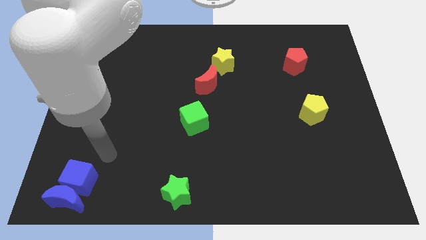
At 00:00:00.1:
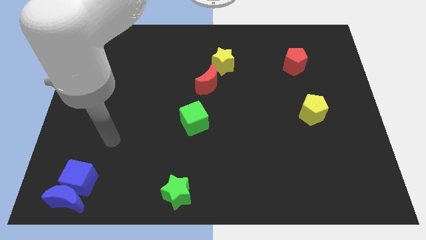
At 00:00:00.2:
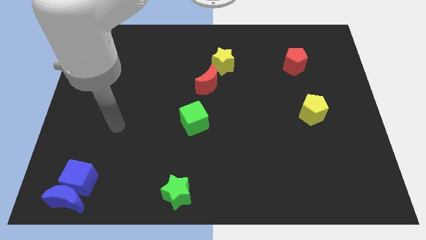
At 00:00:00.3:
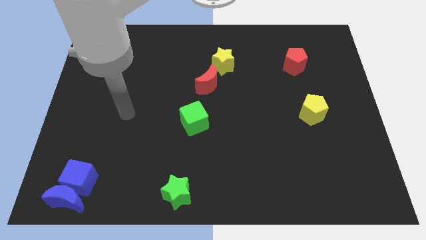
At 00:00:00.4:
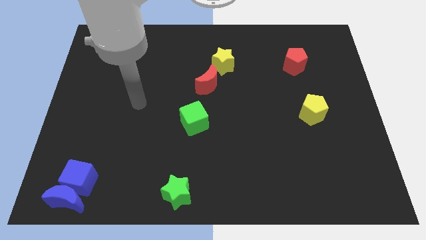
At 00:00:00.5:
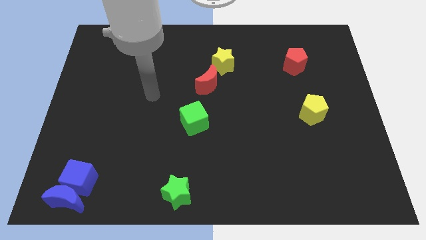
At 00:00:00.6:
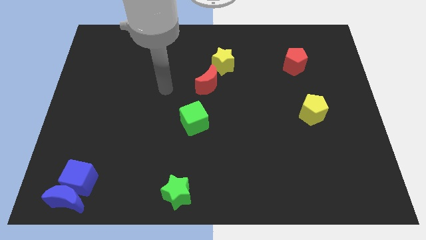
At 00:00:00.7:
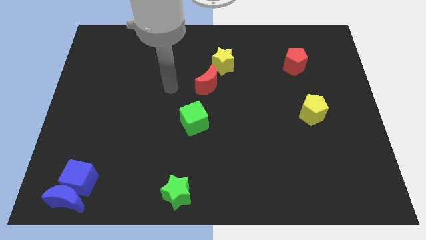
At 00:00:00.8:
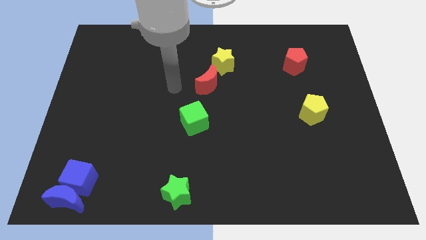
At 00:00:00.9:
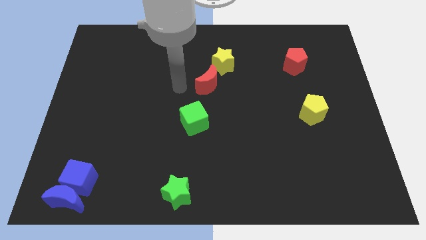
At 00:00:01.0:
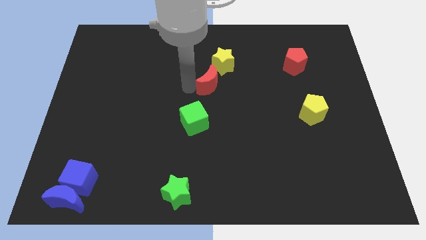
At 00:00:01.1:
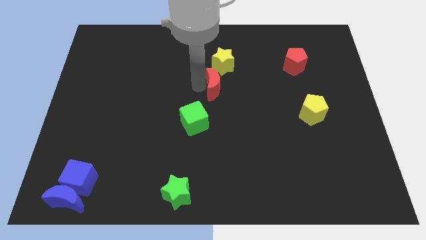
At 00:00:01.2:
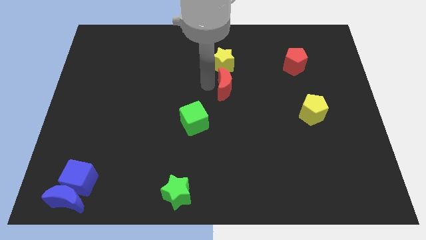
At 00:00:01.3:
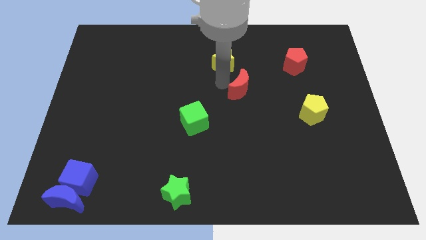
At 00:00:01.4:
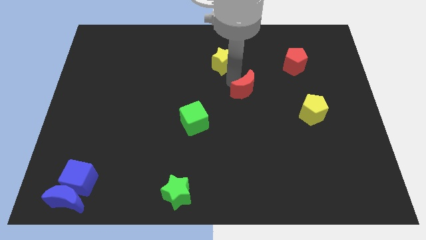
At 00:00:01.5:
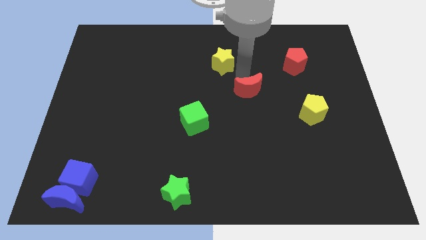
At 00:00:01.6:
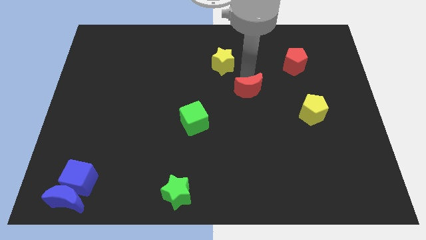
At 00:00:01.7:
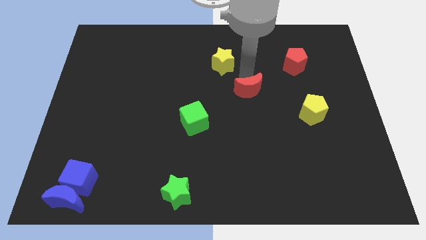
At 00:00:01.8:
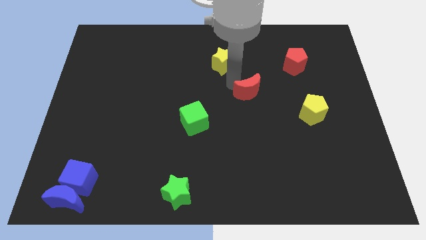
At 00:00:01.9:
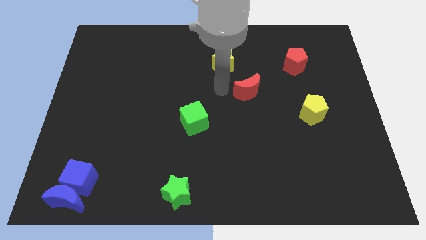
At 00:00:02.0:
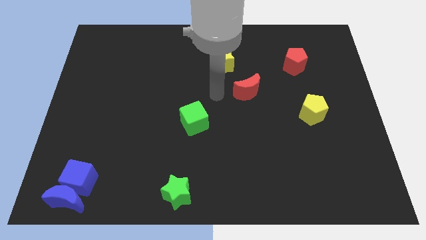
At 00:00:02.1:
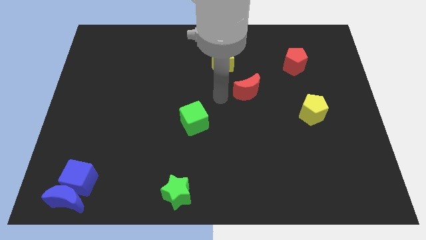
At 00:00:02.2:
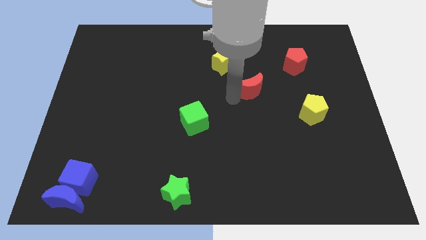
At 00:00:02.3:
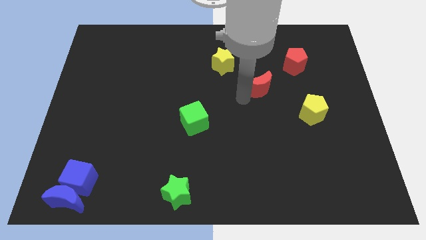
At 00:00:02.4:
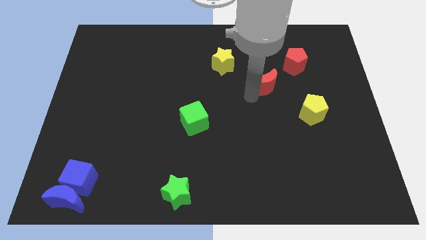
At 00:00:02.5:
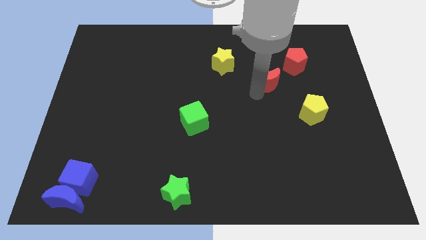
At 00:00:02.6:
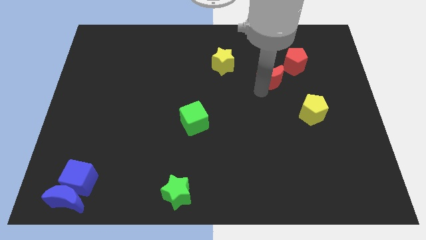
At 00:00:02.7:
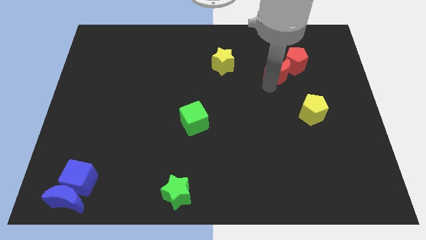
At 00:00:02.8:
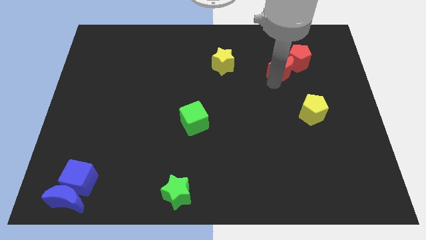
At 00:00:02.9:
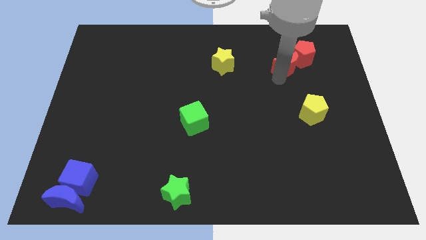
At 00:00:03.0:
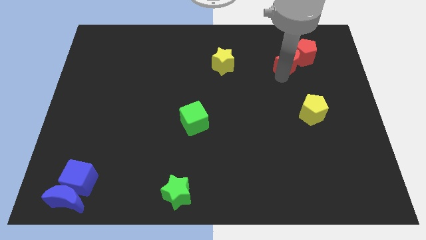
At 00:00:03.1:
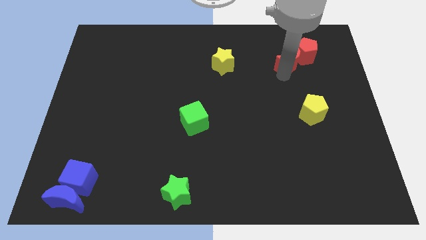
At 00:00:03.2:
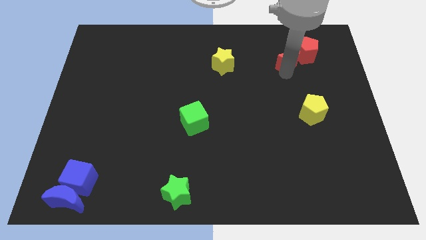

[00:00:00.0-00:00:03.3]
move the red moon into red pentagon

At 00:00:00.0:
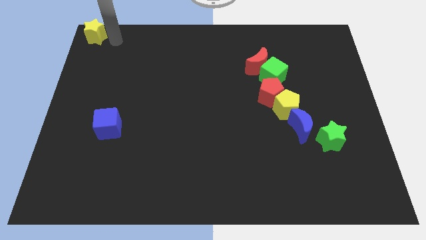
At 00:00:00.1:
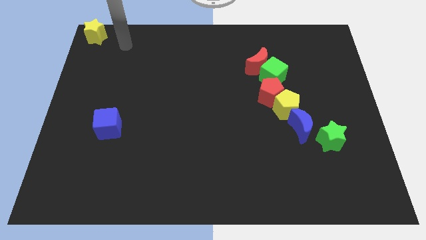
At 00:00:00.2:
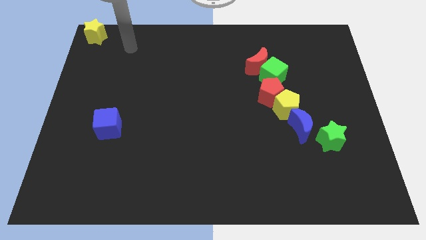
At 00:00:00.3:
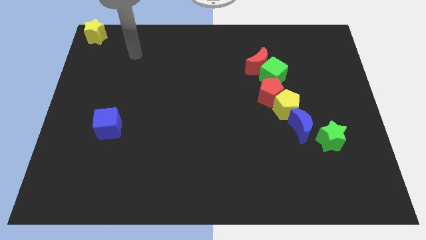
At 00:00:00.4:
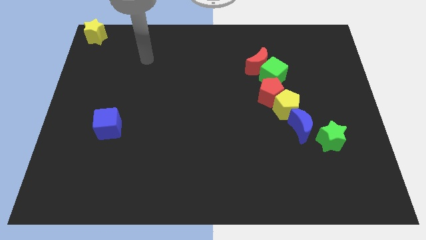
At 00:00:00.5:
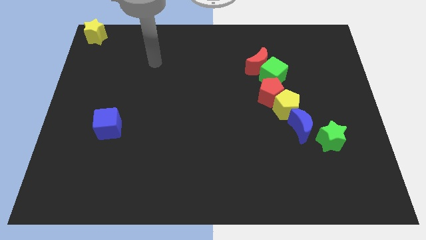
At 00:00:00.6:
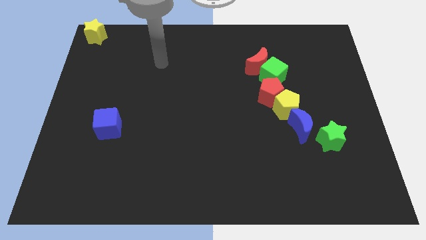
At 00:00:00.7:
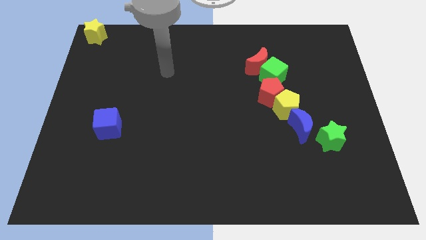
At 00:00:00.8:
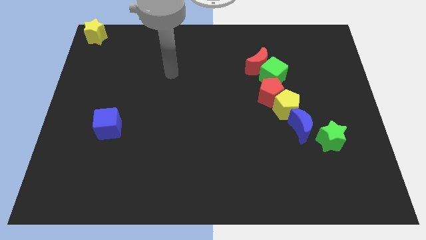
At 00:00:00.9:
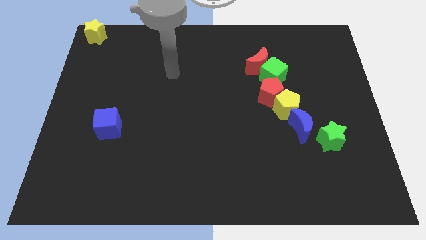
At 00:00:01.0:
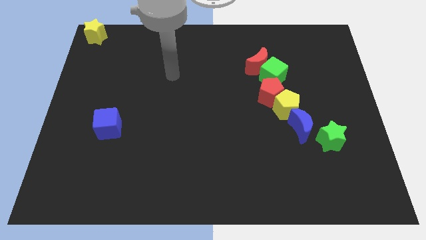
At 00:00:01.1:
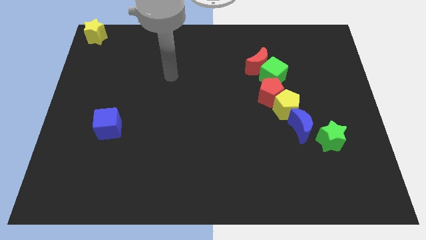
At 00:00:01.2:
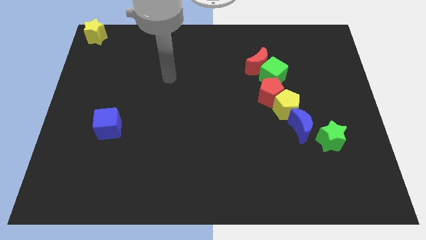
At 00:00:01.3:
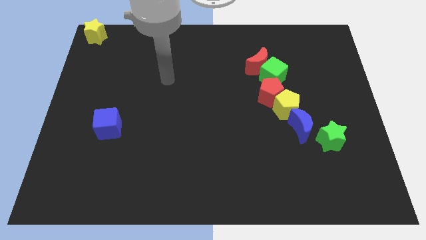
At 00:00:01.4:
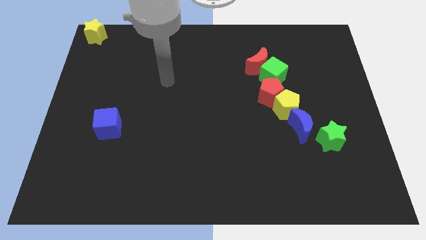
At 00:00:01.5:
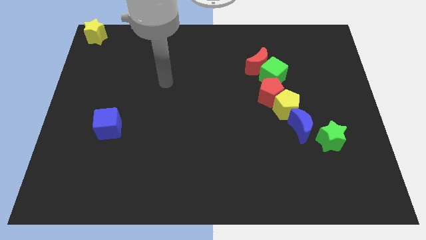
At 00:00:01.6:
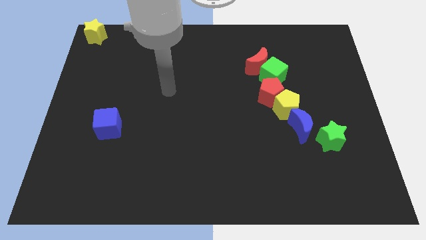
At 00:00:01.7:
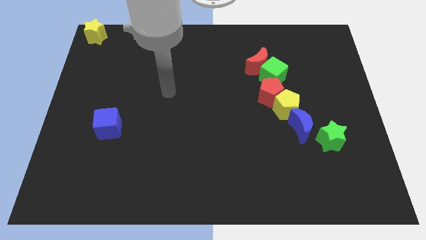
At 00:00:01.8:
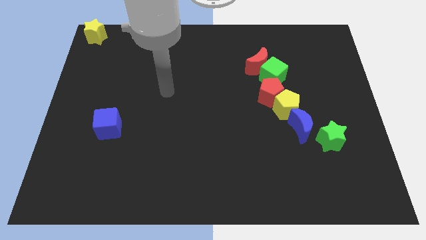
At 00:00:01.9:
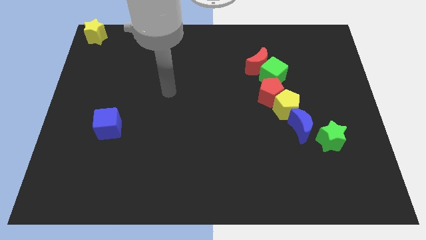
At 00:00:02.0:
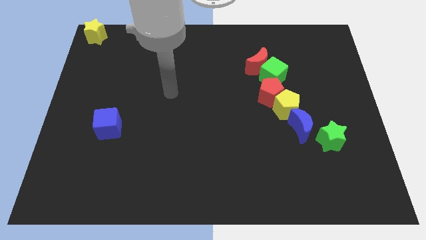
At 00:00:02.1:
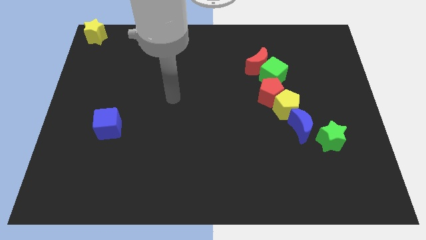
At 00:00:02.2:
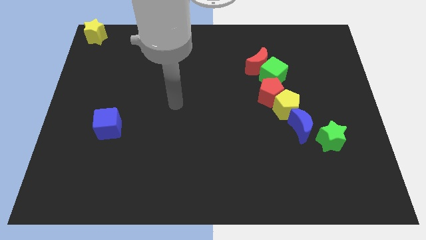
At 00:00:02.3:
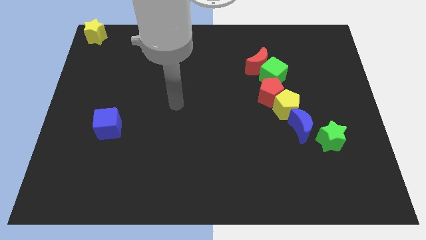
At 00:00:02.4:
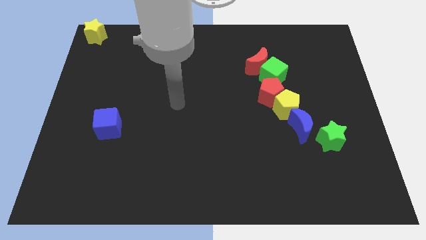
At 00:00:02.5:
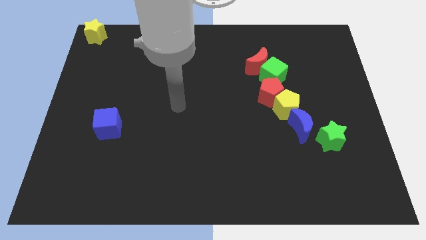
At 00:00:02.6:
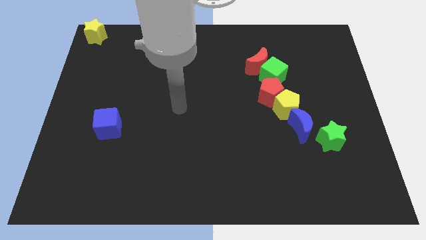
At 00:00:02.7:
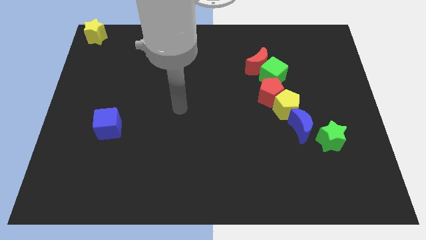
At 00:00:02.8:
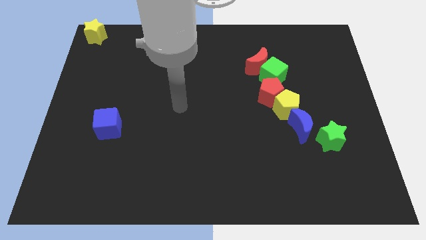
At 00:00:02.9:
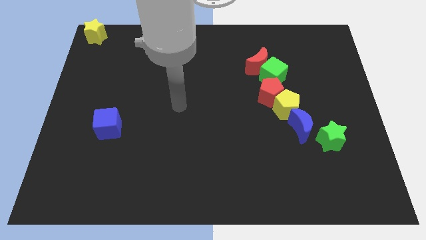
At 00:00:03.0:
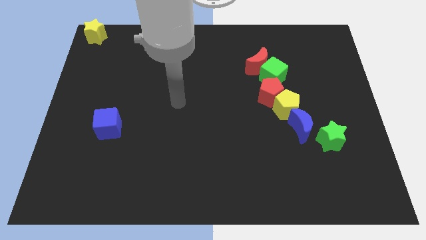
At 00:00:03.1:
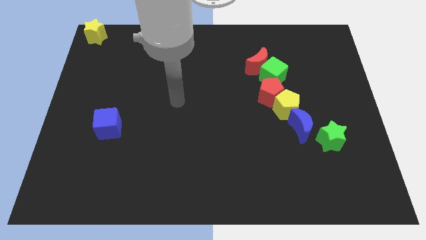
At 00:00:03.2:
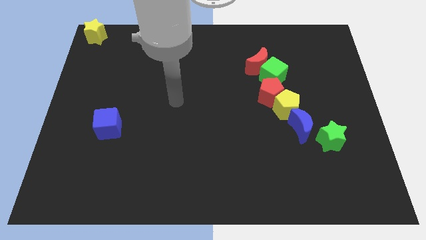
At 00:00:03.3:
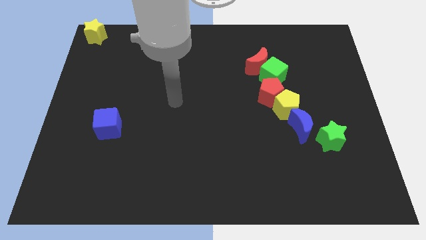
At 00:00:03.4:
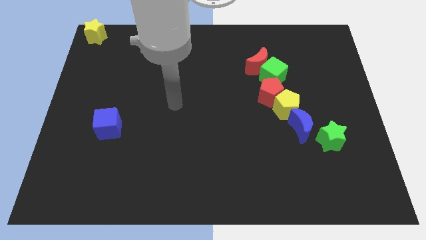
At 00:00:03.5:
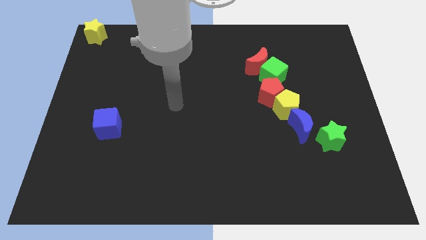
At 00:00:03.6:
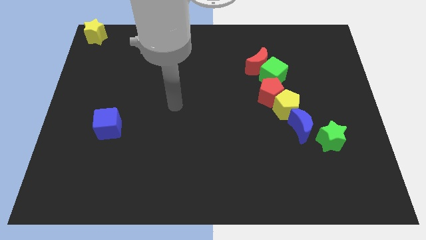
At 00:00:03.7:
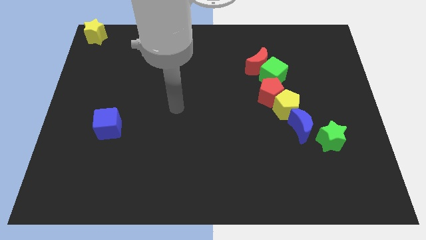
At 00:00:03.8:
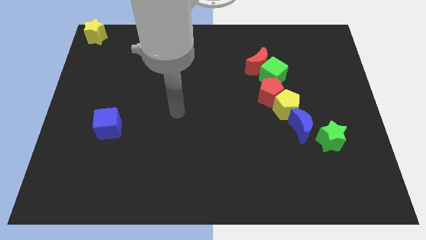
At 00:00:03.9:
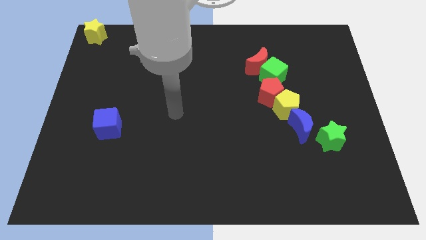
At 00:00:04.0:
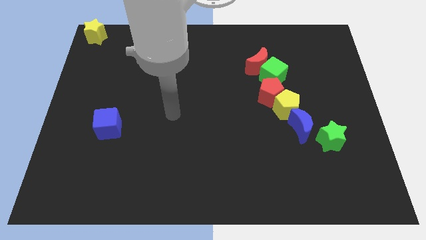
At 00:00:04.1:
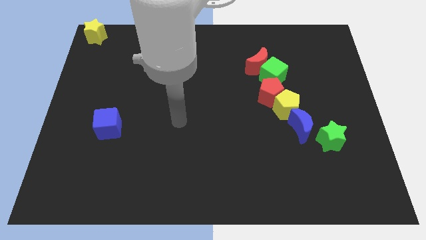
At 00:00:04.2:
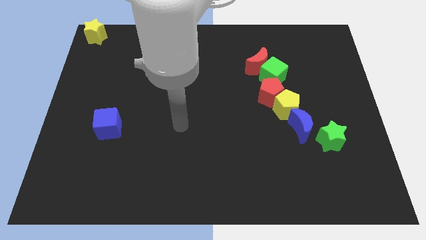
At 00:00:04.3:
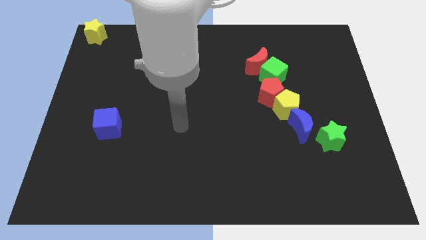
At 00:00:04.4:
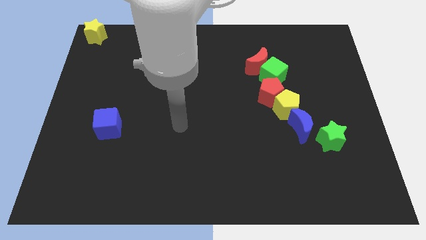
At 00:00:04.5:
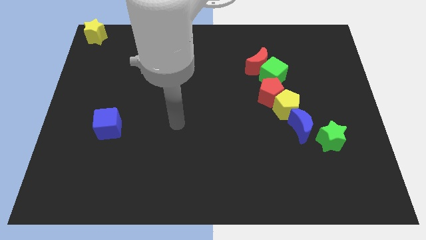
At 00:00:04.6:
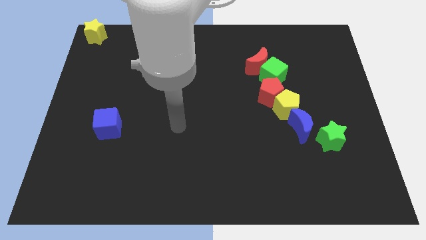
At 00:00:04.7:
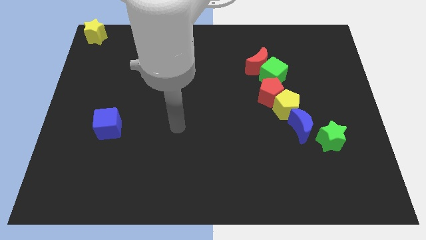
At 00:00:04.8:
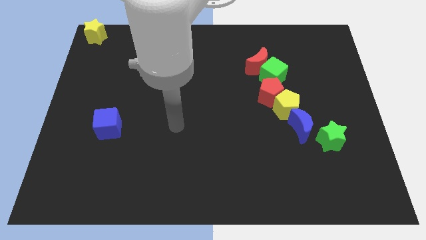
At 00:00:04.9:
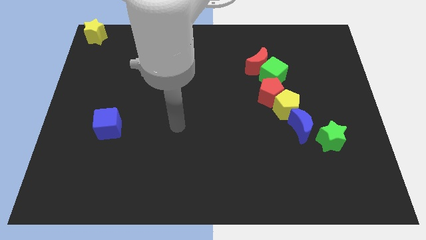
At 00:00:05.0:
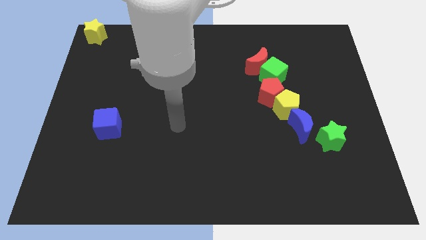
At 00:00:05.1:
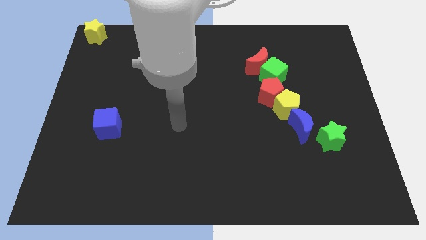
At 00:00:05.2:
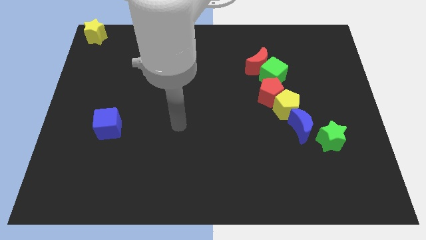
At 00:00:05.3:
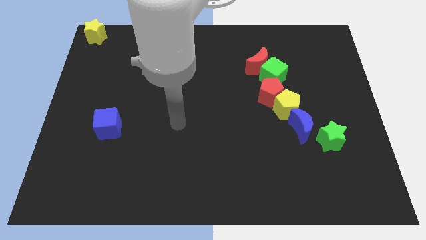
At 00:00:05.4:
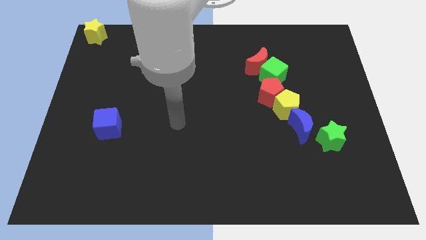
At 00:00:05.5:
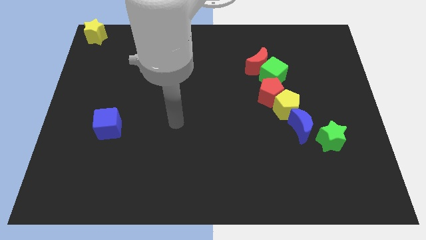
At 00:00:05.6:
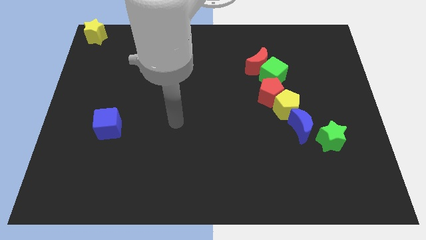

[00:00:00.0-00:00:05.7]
move the arm away from the yellow star
